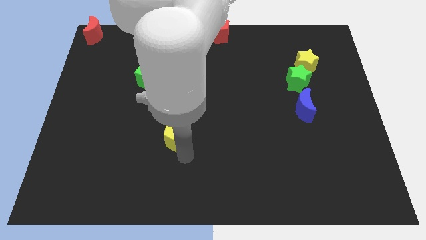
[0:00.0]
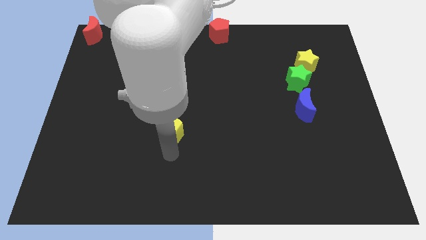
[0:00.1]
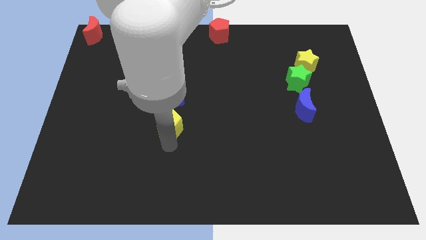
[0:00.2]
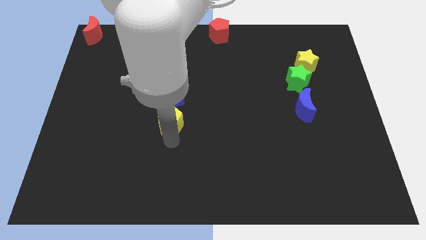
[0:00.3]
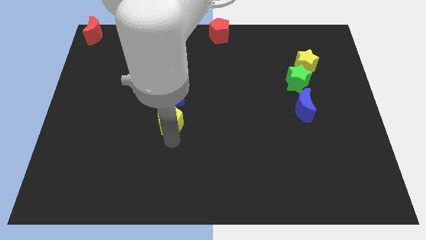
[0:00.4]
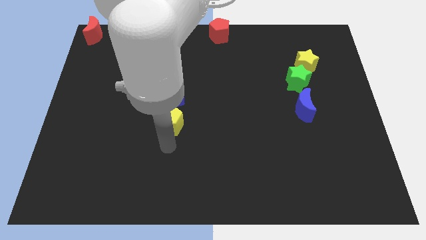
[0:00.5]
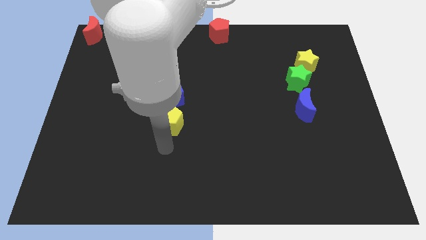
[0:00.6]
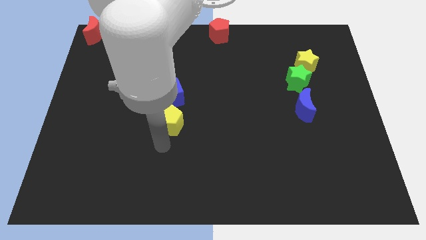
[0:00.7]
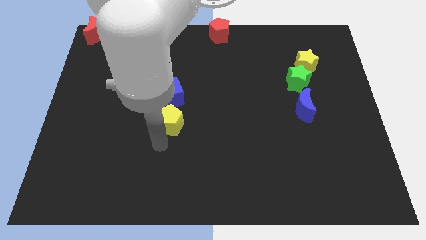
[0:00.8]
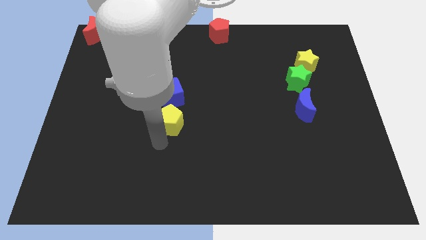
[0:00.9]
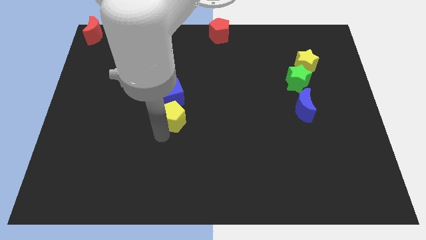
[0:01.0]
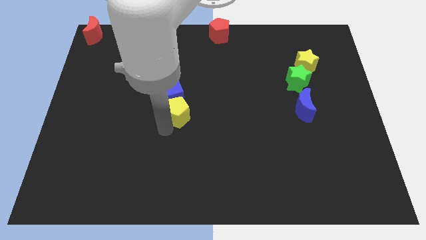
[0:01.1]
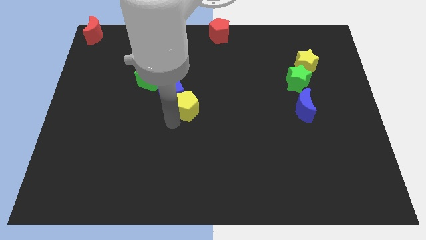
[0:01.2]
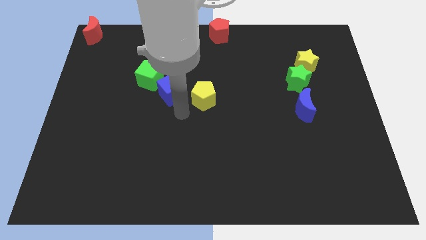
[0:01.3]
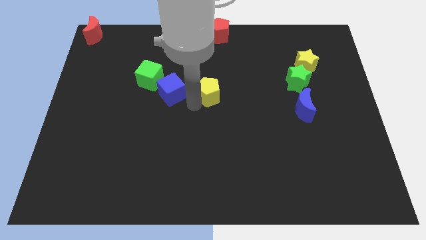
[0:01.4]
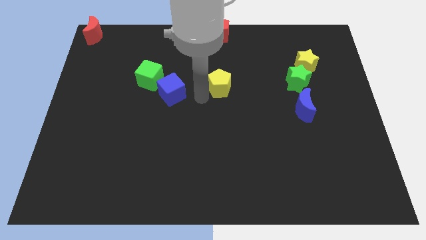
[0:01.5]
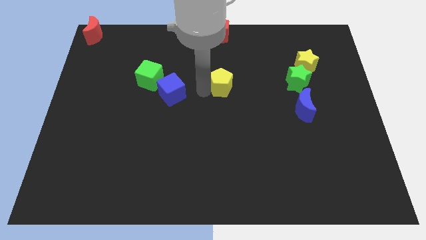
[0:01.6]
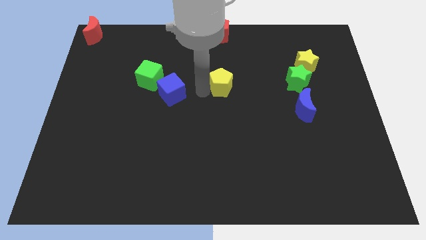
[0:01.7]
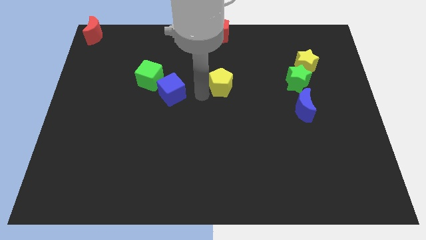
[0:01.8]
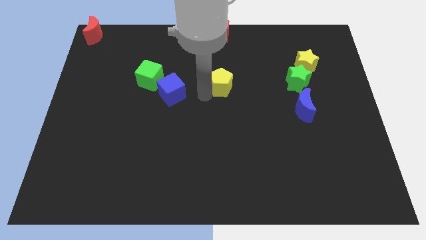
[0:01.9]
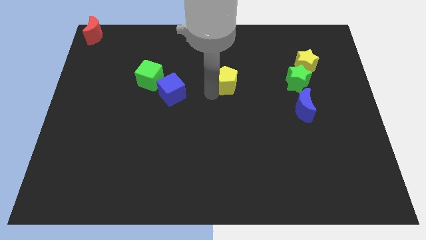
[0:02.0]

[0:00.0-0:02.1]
push the yellow pentagon to the right of the blue cube

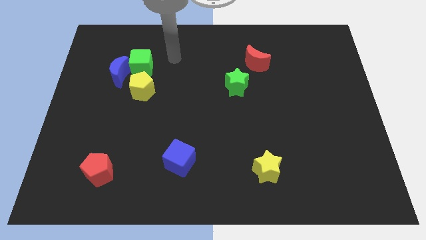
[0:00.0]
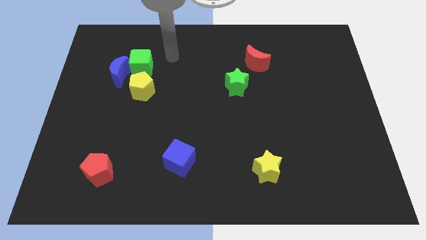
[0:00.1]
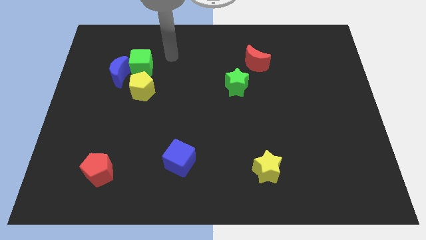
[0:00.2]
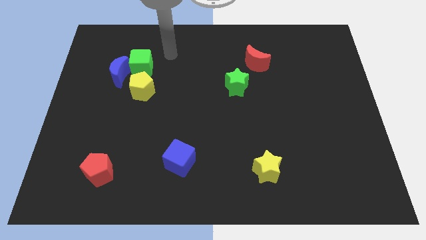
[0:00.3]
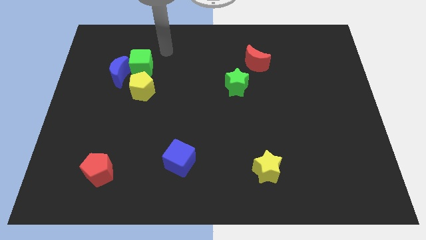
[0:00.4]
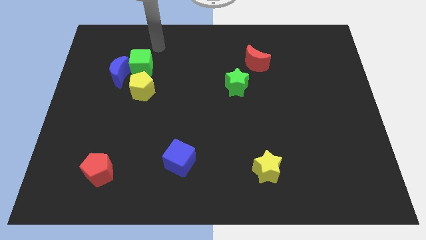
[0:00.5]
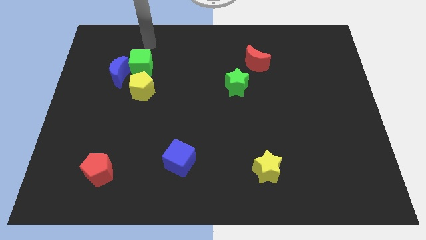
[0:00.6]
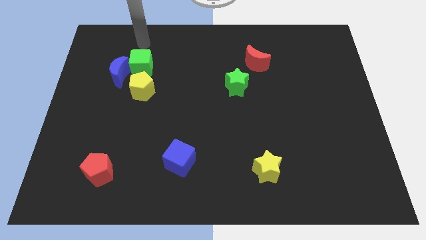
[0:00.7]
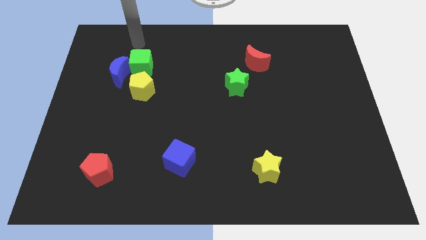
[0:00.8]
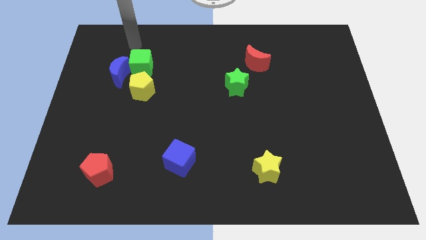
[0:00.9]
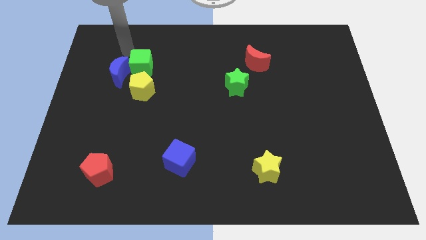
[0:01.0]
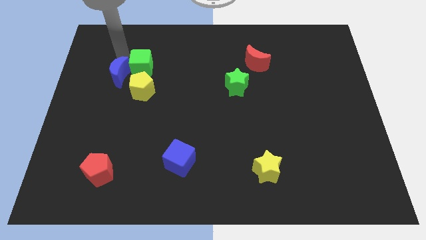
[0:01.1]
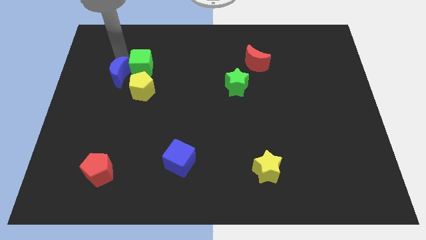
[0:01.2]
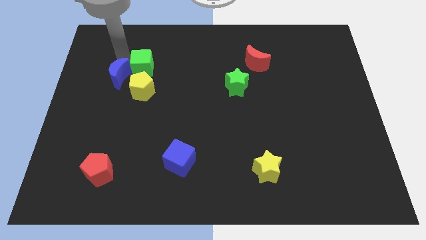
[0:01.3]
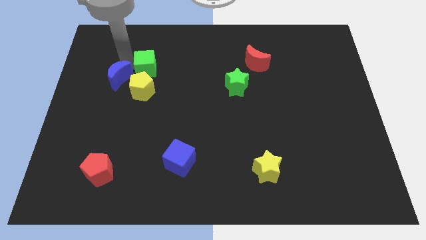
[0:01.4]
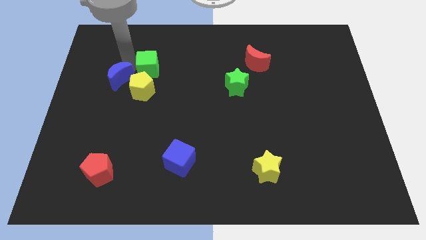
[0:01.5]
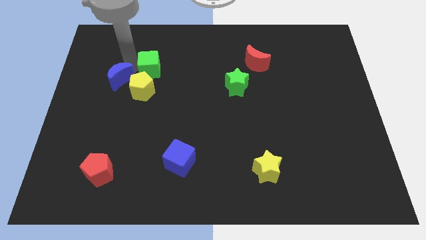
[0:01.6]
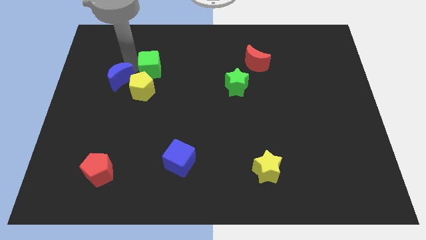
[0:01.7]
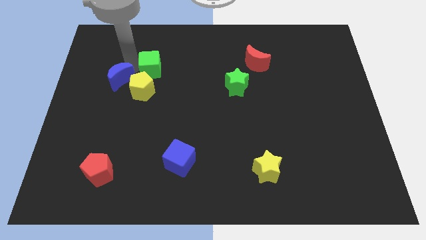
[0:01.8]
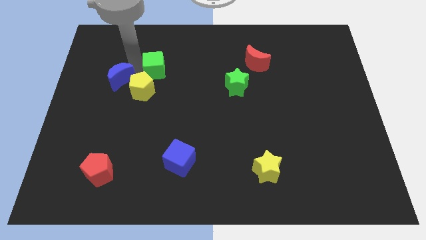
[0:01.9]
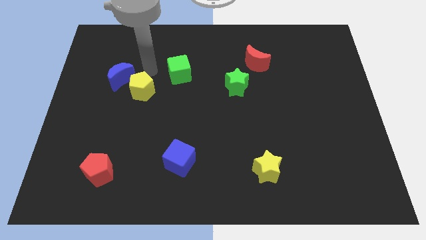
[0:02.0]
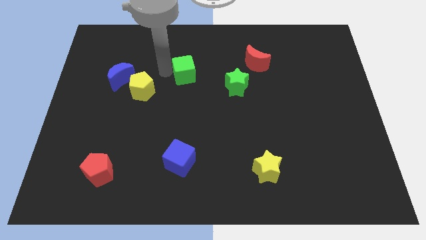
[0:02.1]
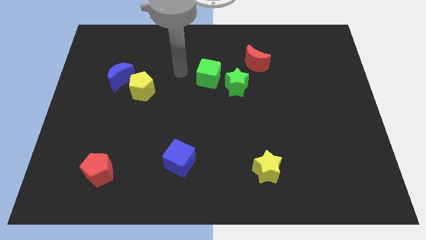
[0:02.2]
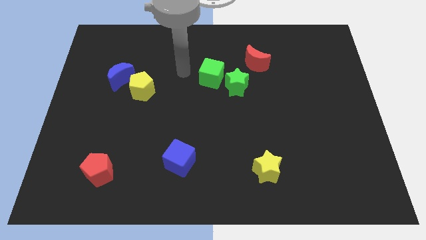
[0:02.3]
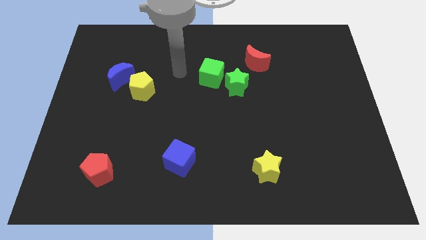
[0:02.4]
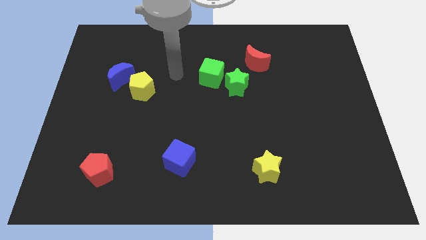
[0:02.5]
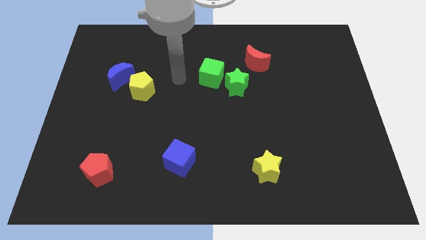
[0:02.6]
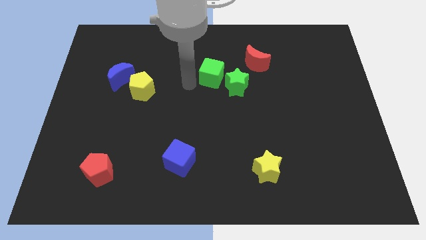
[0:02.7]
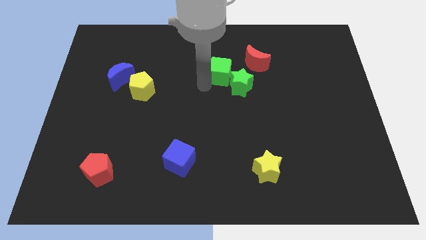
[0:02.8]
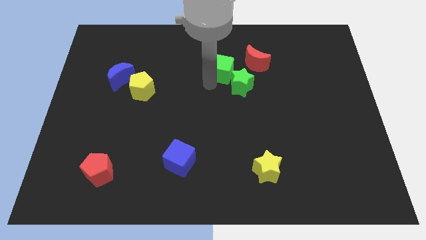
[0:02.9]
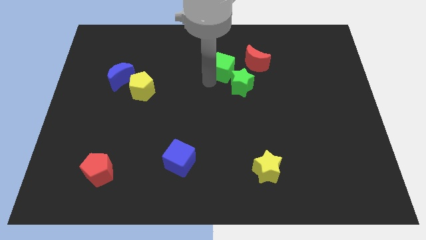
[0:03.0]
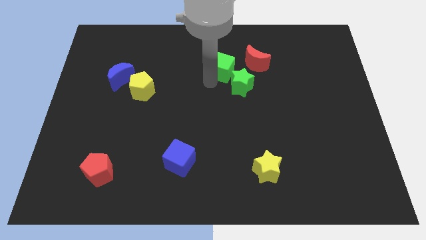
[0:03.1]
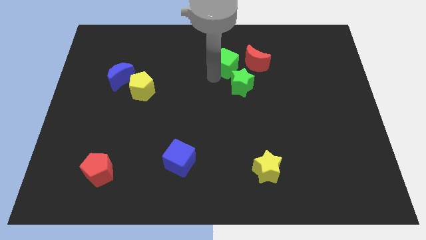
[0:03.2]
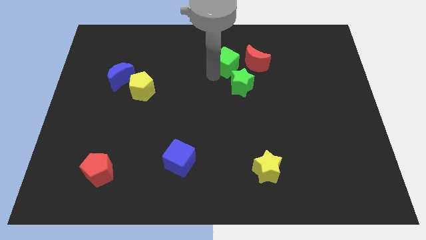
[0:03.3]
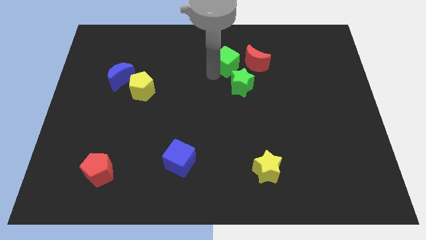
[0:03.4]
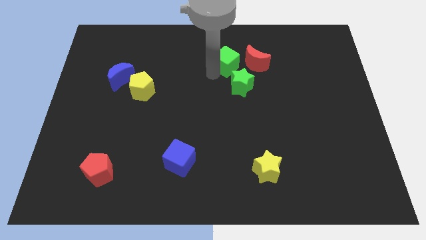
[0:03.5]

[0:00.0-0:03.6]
separate the blue moon and the green cube

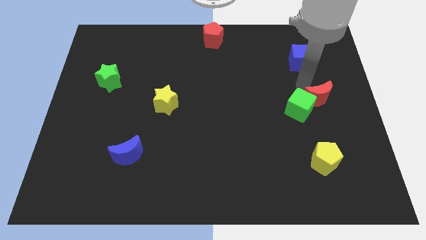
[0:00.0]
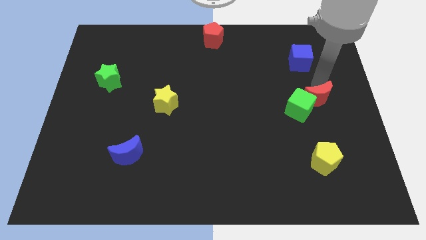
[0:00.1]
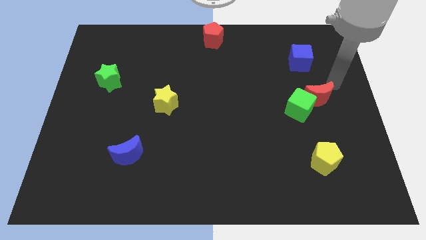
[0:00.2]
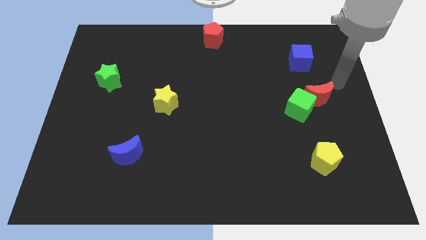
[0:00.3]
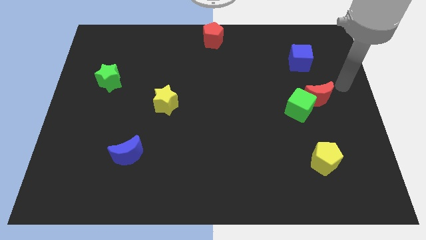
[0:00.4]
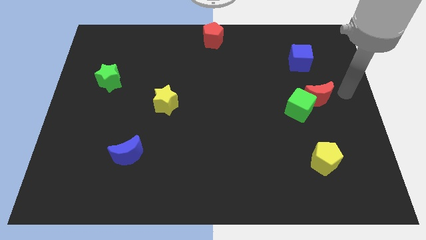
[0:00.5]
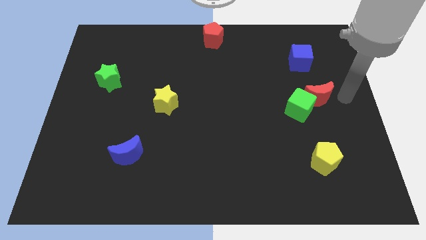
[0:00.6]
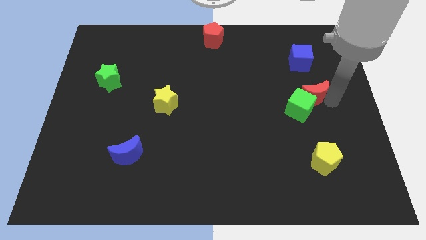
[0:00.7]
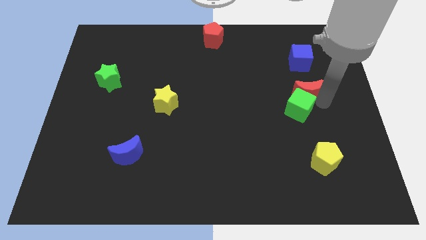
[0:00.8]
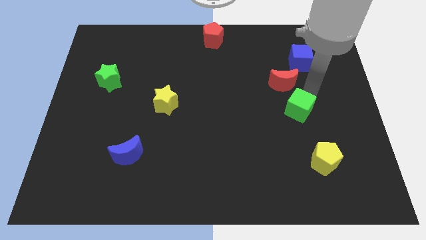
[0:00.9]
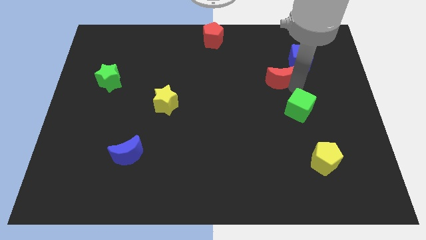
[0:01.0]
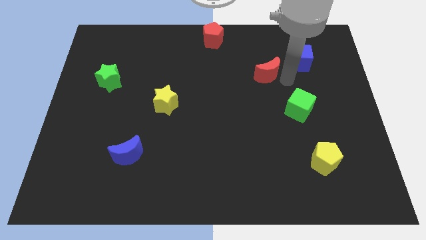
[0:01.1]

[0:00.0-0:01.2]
push the red crescent away from the green cube

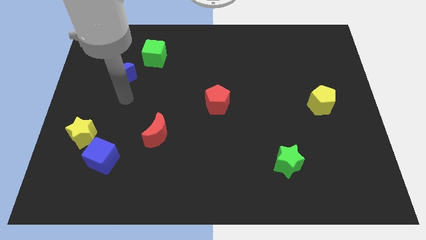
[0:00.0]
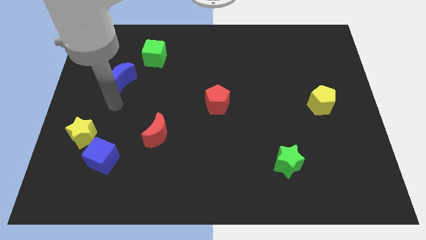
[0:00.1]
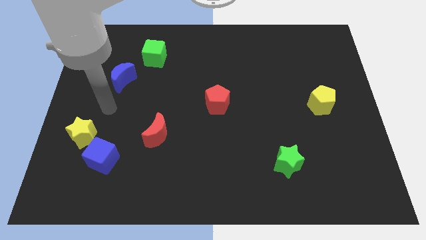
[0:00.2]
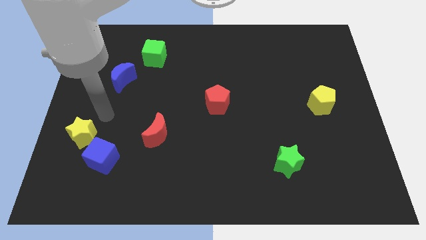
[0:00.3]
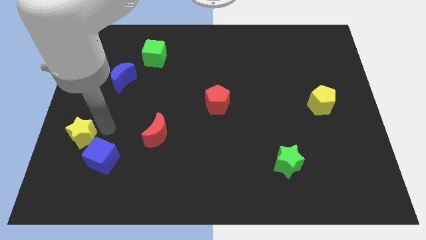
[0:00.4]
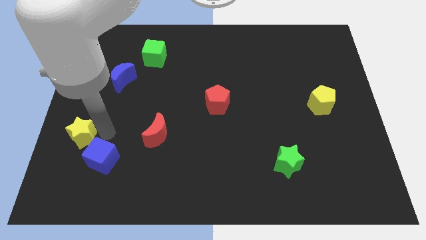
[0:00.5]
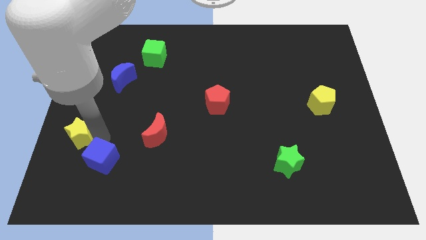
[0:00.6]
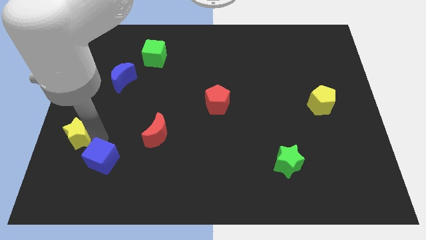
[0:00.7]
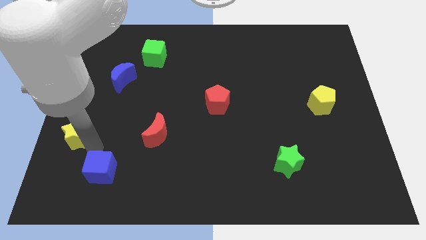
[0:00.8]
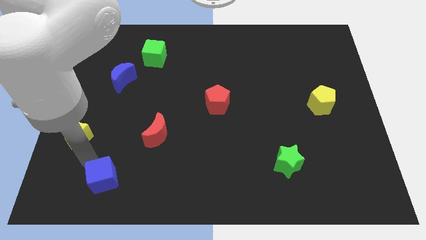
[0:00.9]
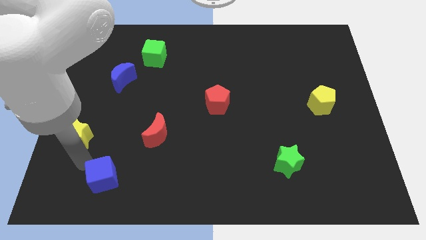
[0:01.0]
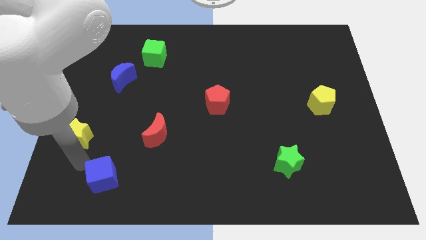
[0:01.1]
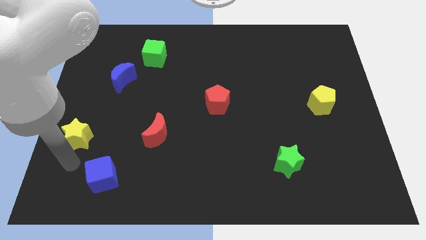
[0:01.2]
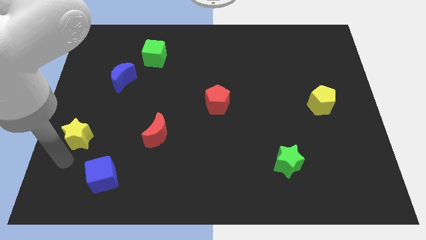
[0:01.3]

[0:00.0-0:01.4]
separate the yellow star and the blue cube

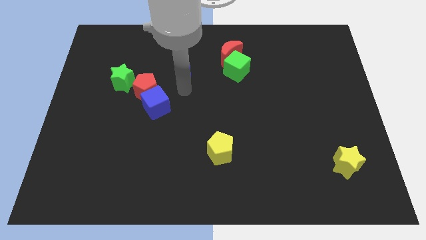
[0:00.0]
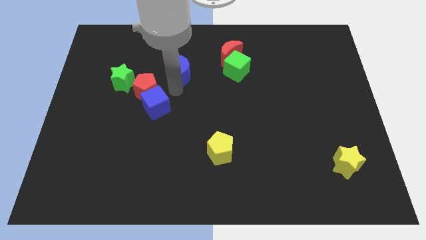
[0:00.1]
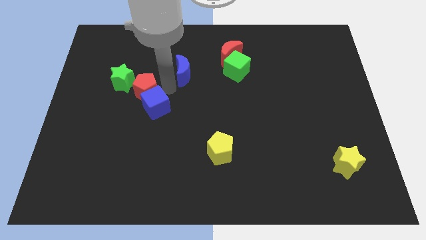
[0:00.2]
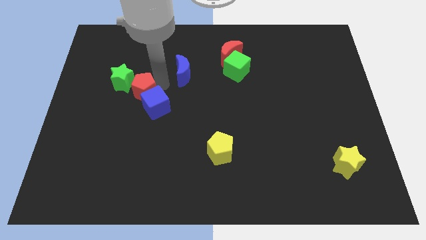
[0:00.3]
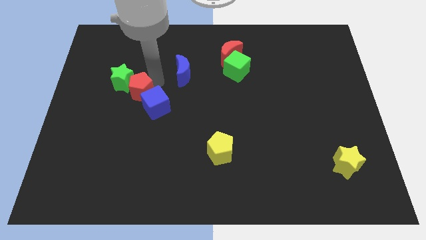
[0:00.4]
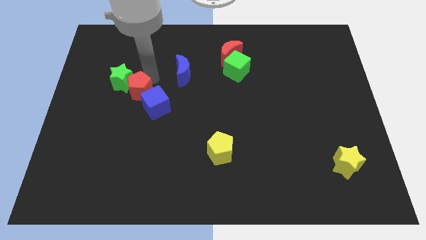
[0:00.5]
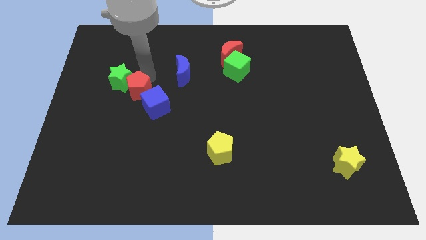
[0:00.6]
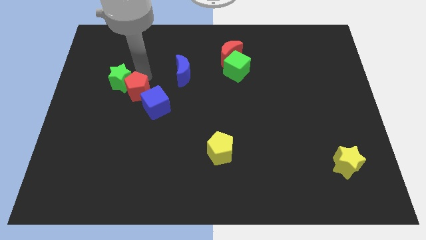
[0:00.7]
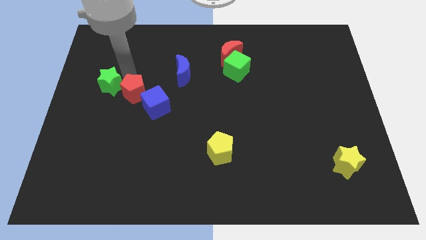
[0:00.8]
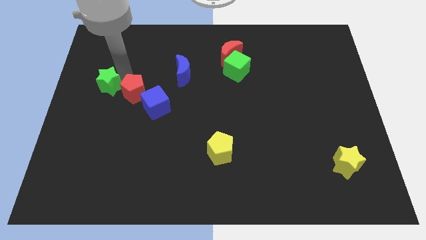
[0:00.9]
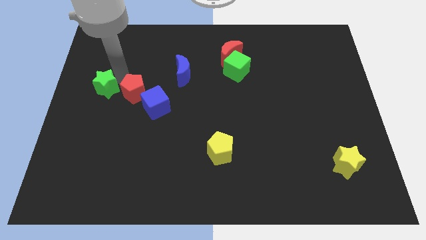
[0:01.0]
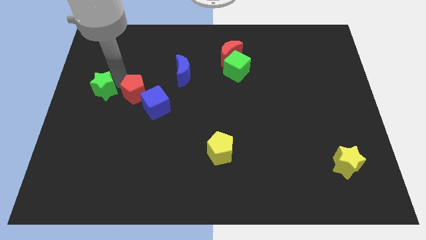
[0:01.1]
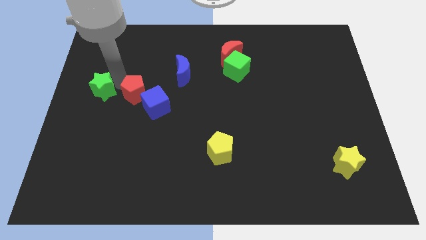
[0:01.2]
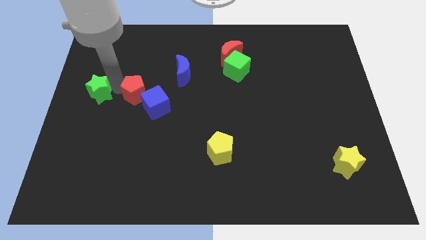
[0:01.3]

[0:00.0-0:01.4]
place green star to the left of red pentagon
